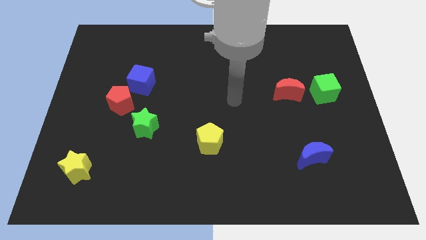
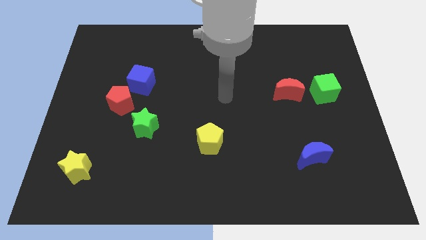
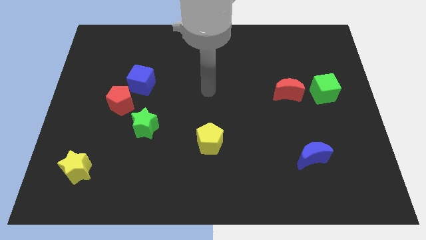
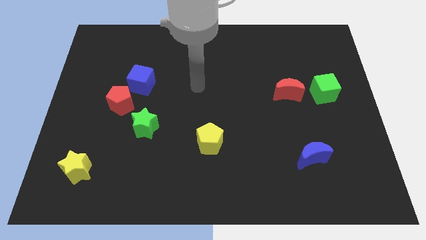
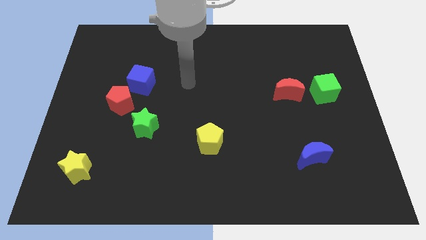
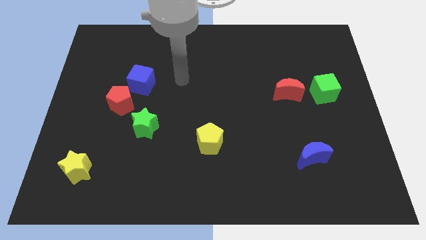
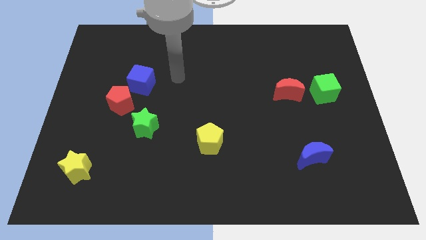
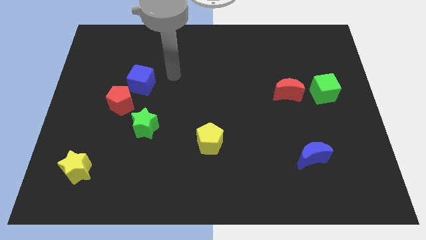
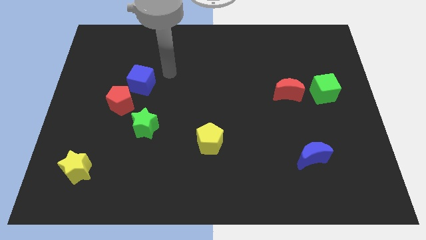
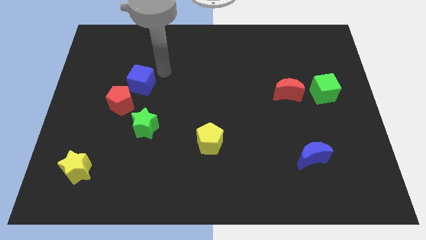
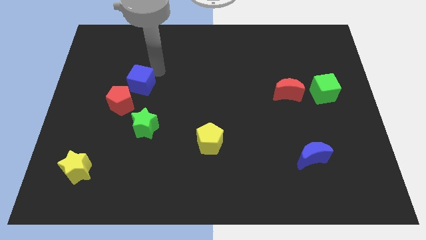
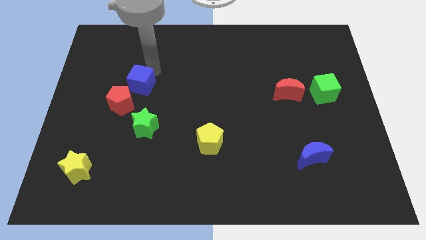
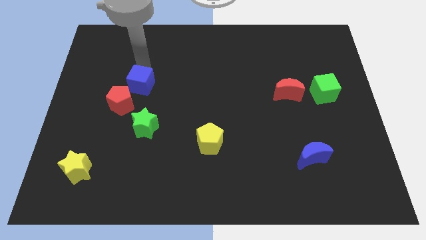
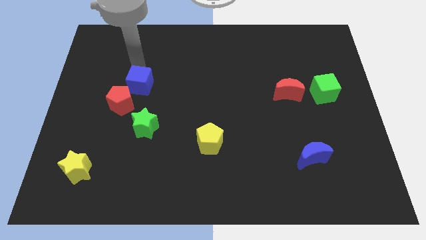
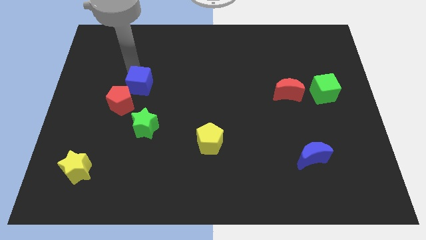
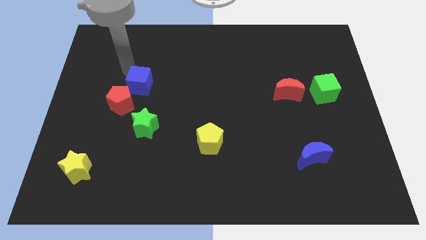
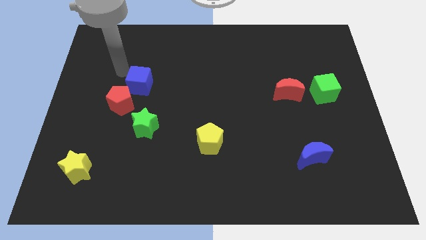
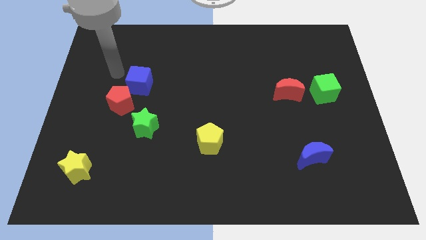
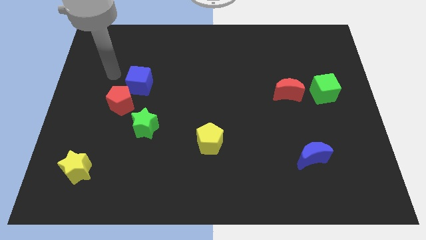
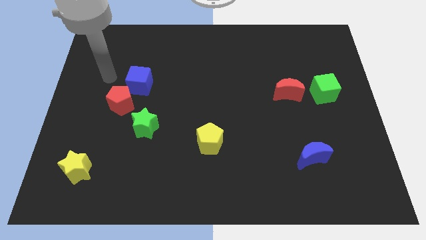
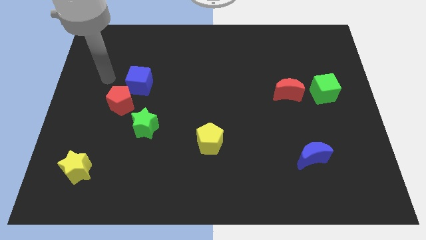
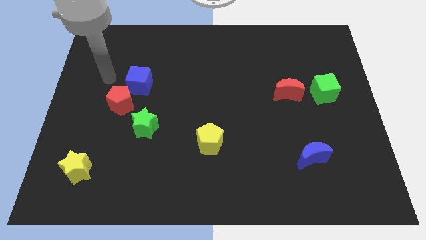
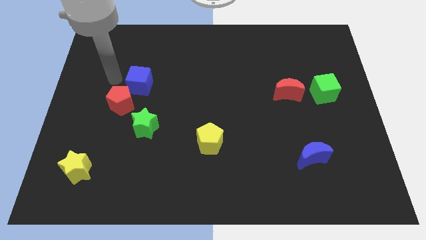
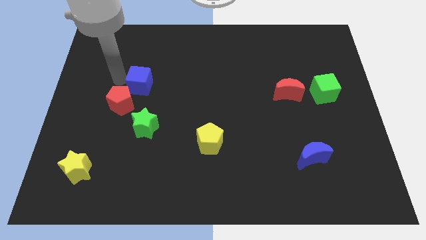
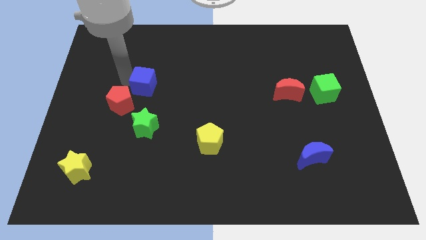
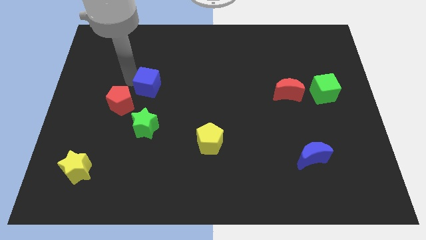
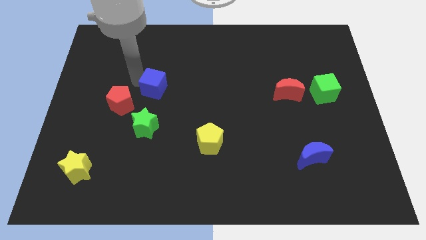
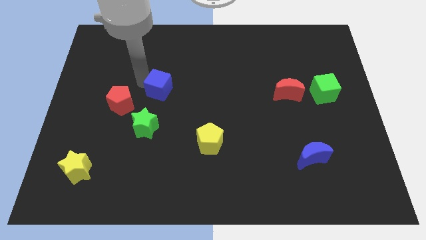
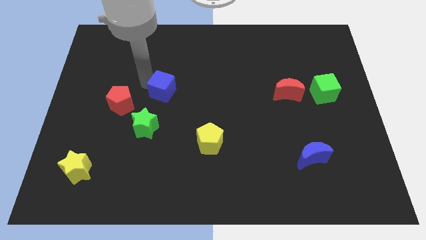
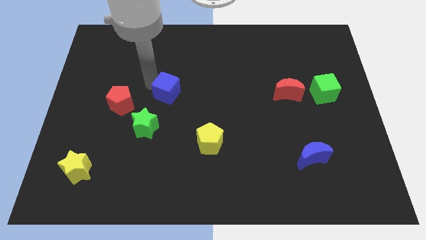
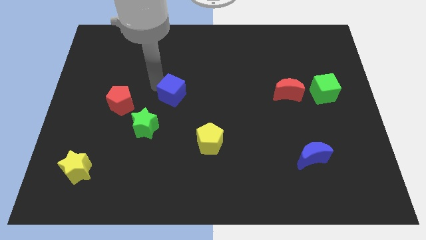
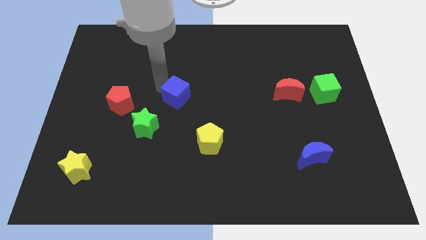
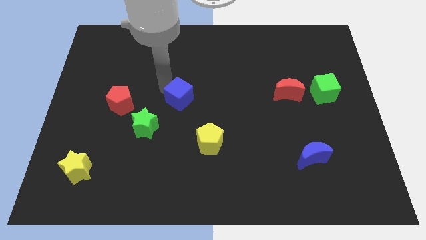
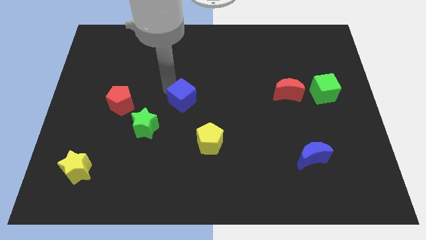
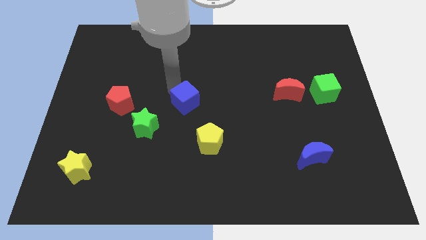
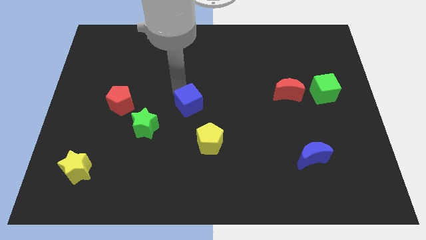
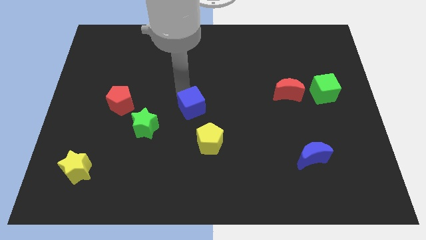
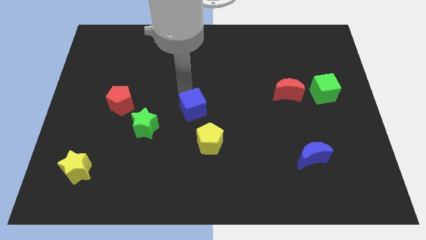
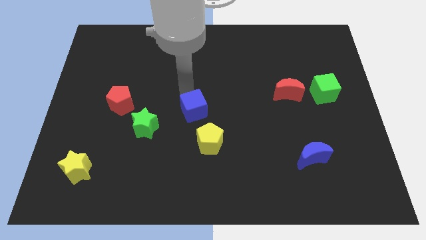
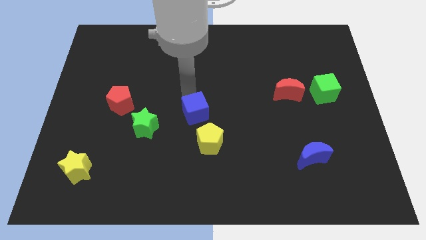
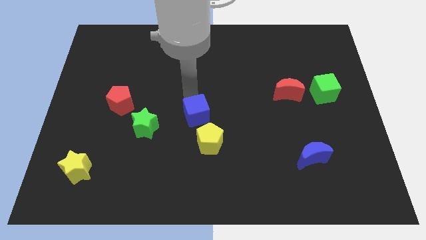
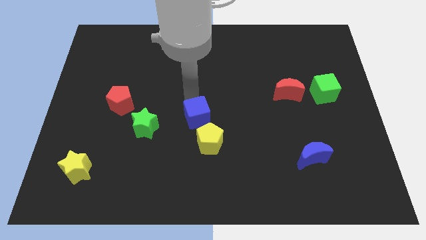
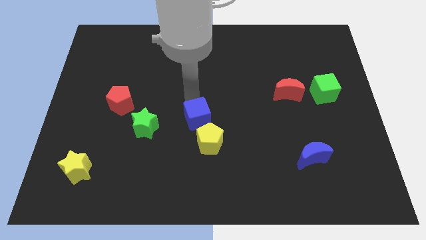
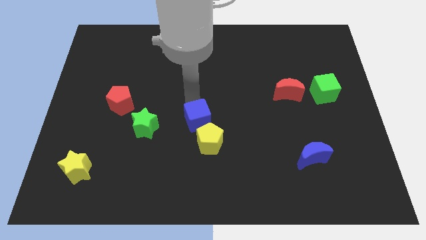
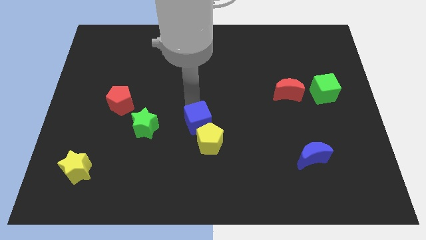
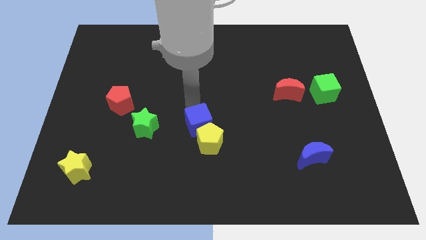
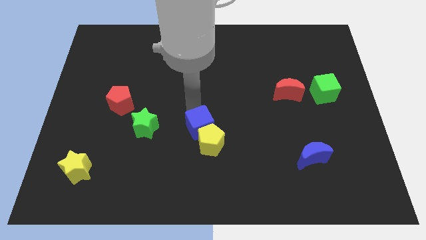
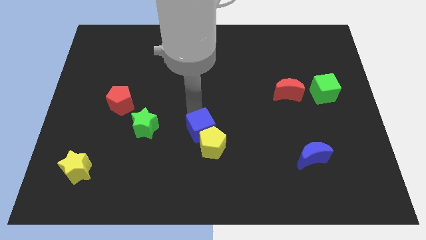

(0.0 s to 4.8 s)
move the blue cube towards the yellow pentagon

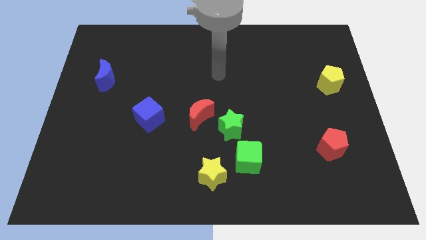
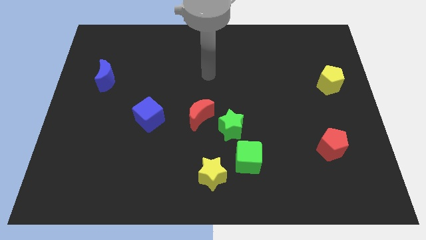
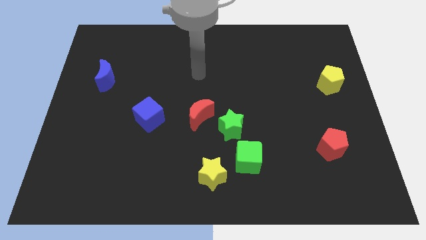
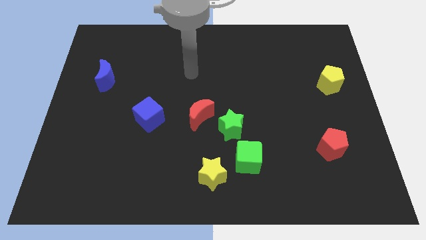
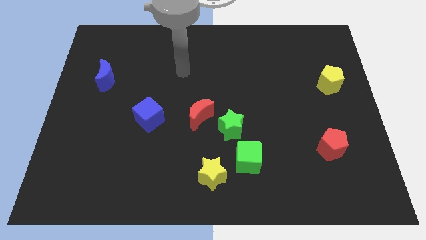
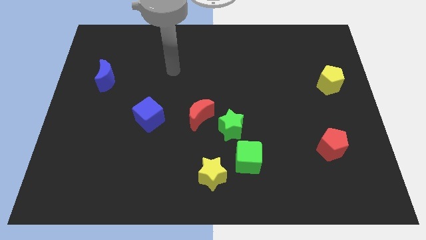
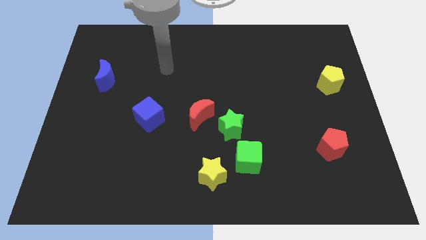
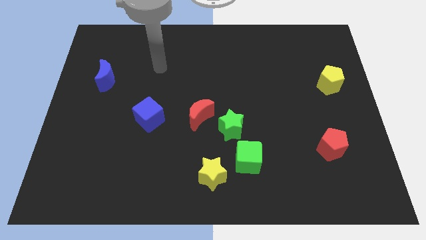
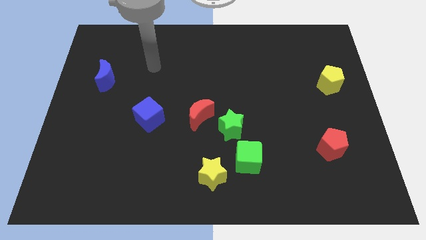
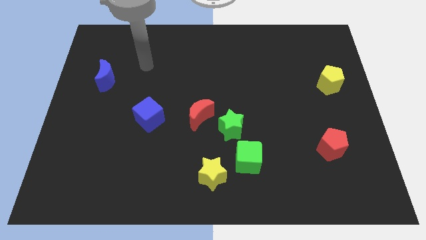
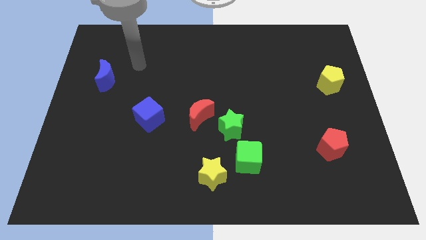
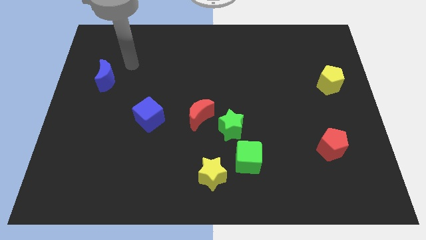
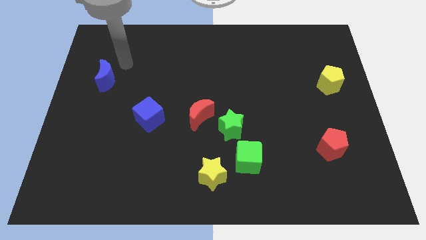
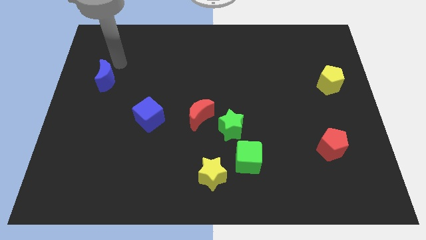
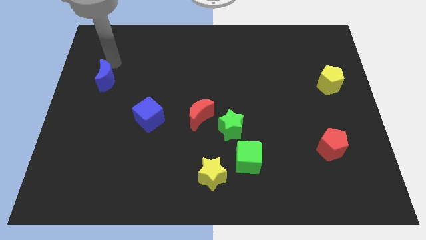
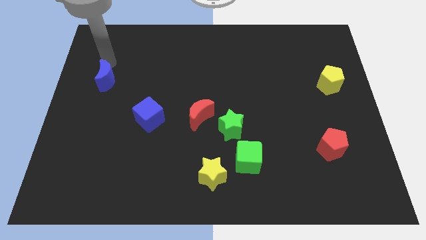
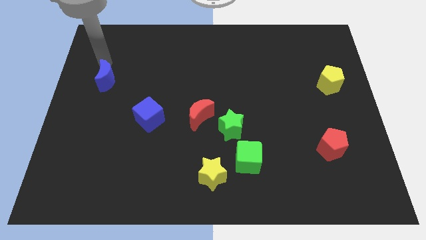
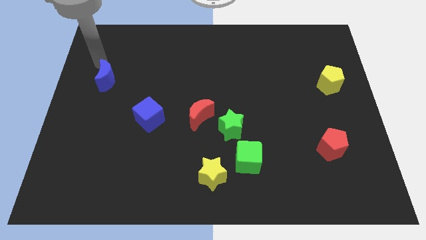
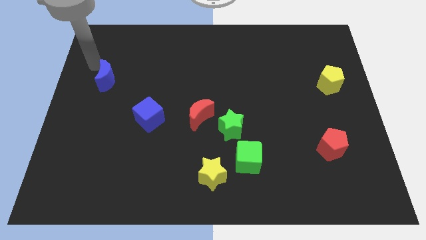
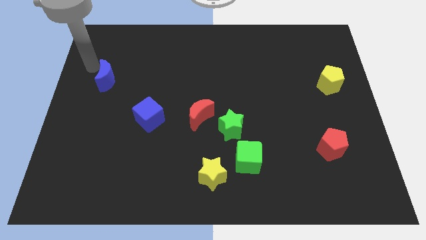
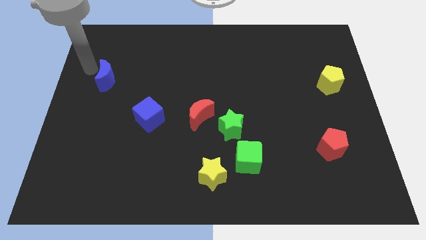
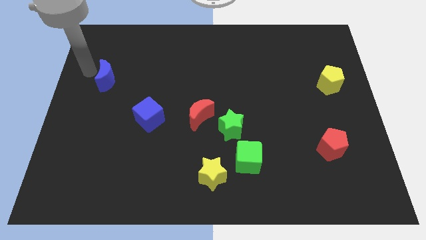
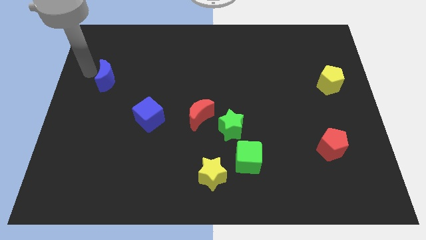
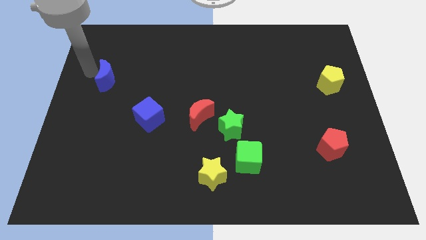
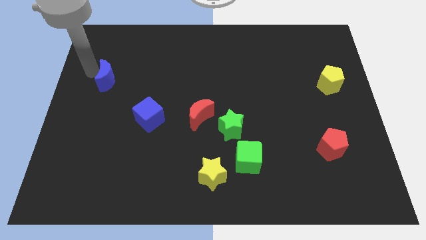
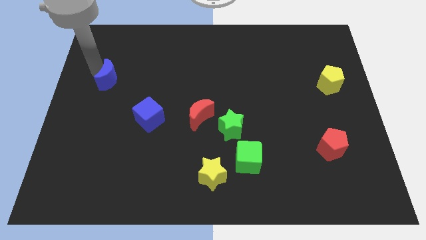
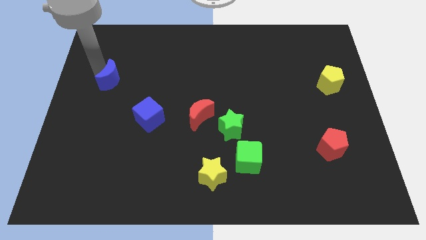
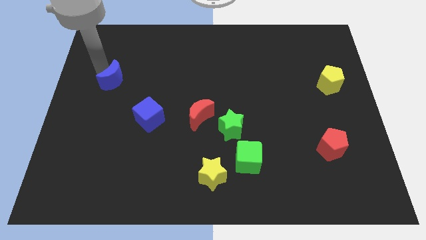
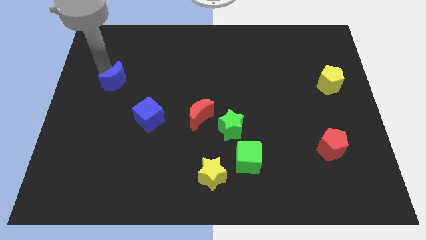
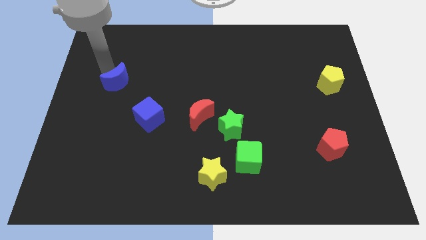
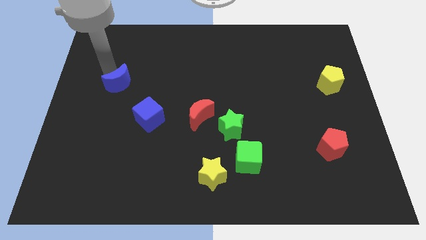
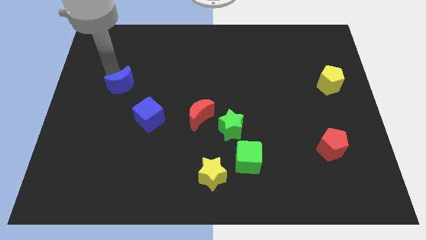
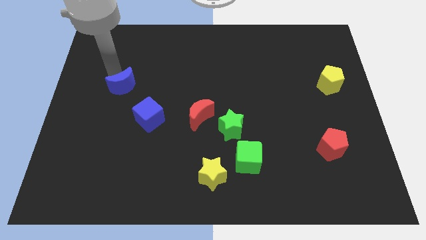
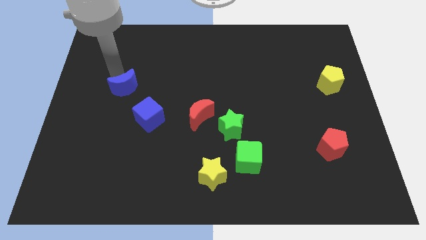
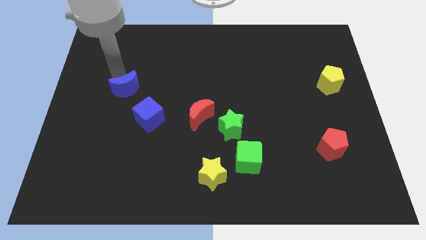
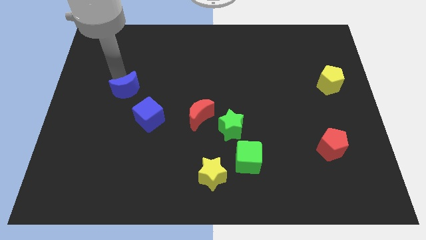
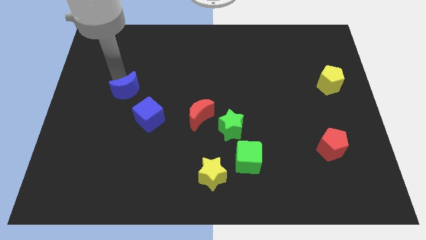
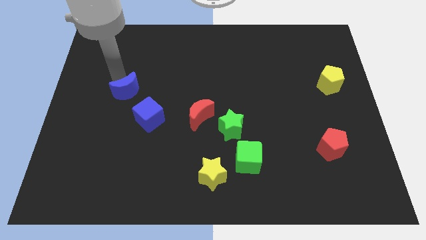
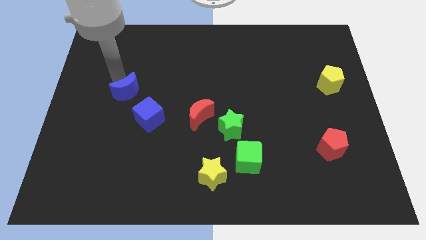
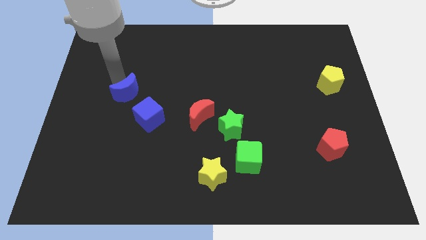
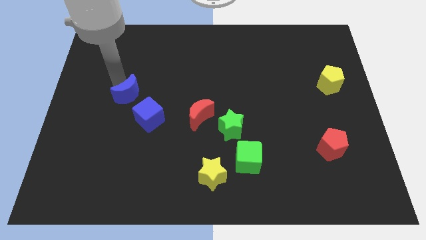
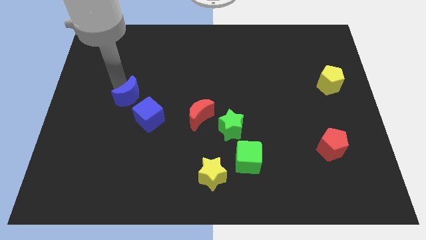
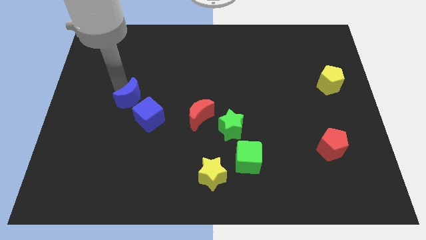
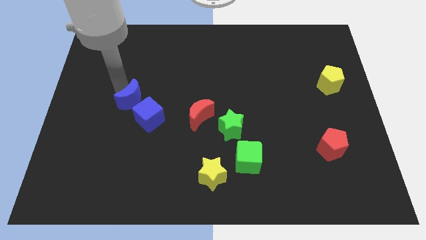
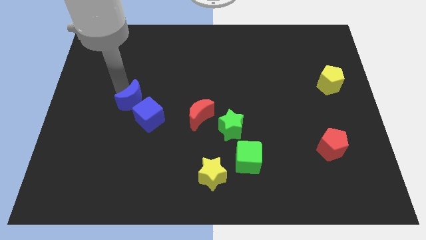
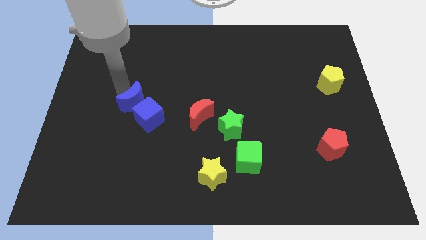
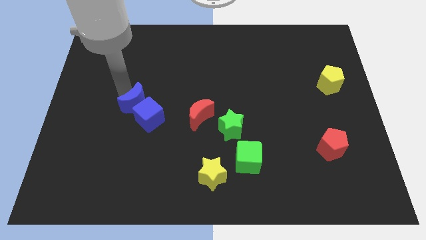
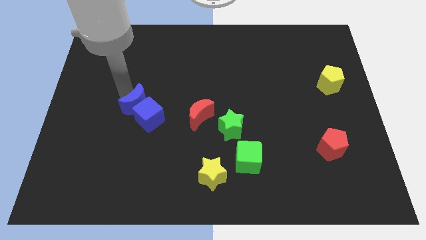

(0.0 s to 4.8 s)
push the blue moon to the blue cube
